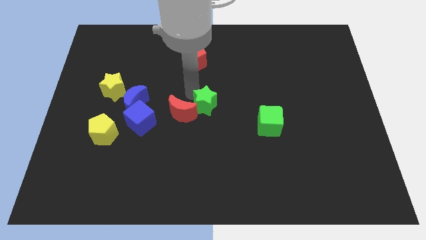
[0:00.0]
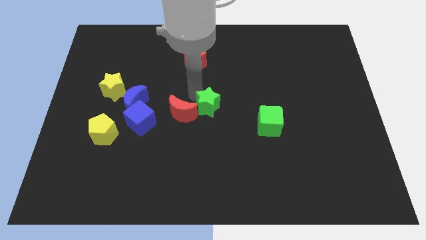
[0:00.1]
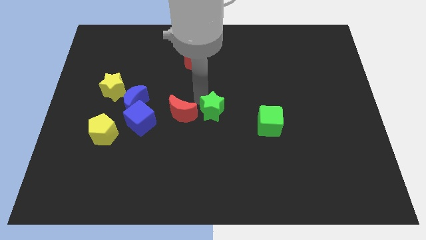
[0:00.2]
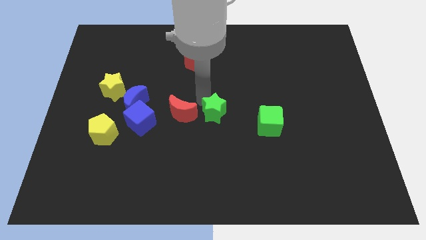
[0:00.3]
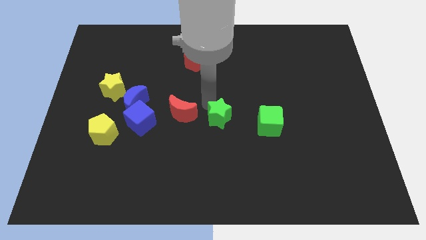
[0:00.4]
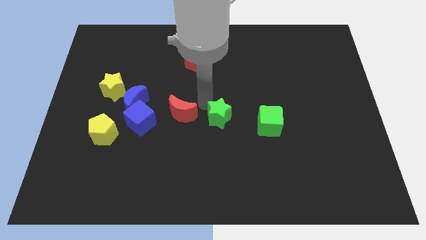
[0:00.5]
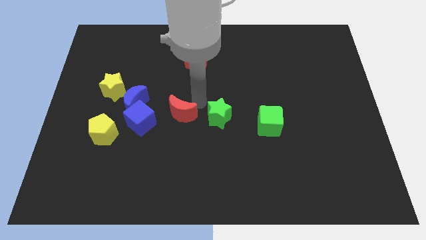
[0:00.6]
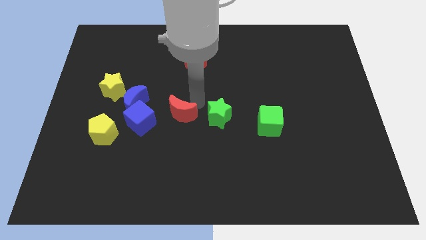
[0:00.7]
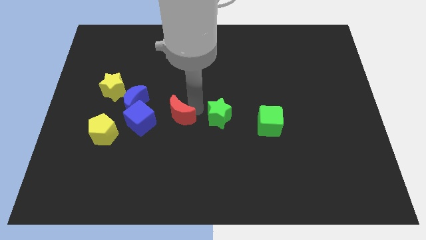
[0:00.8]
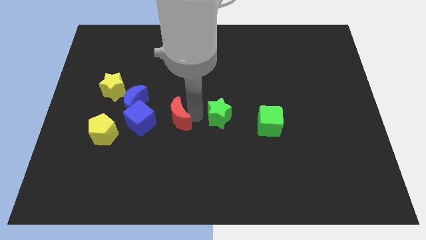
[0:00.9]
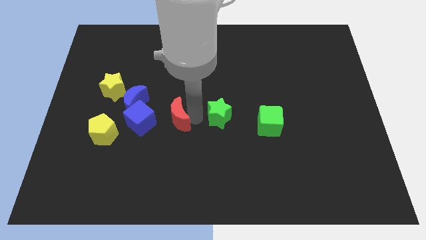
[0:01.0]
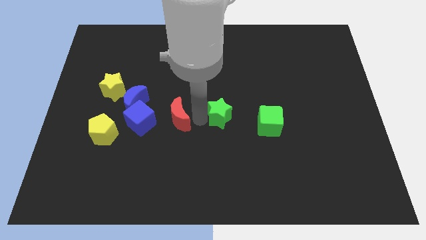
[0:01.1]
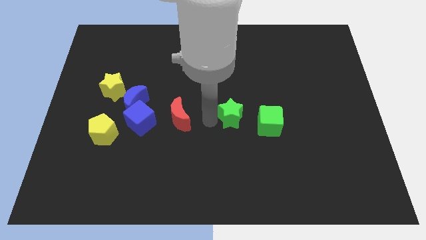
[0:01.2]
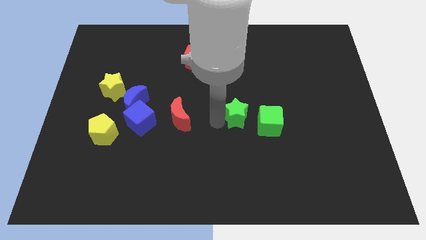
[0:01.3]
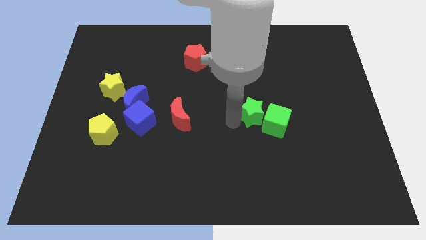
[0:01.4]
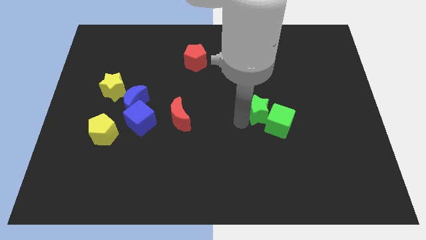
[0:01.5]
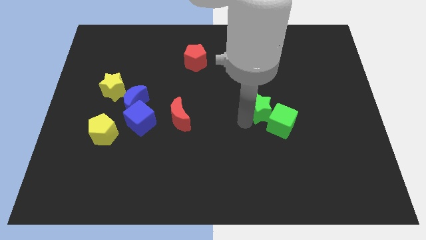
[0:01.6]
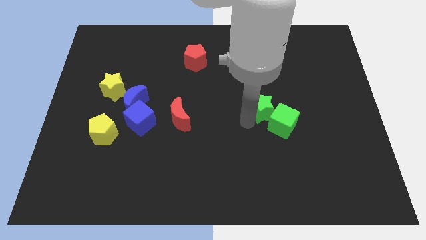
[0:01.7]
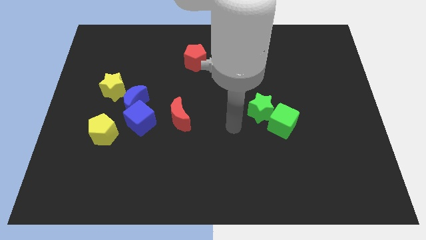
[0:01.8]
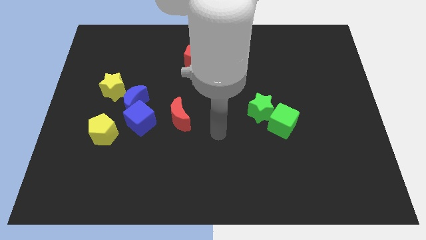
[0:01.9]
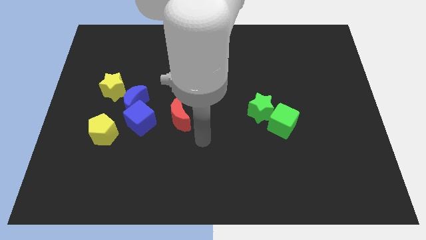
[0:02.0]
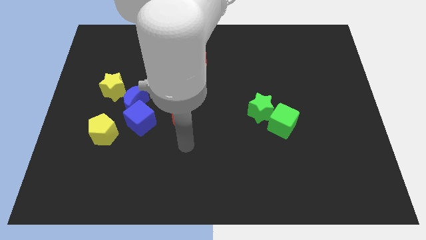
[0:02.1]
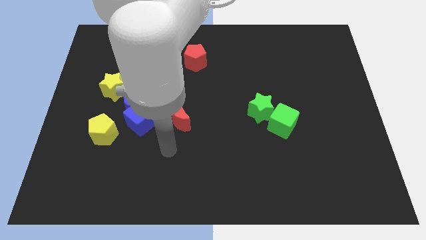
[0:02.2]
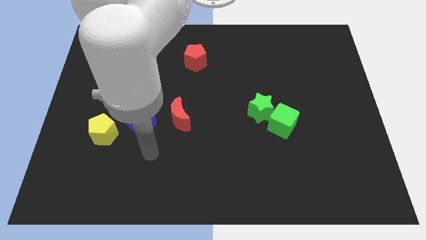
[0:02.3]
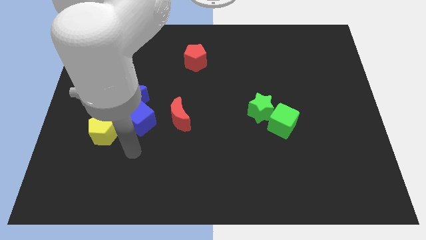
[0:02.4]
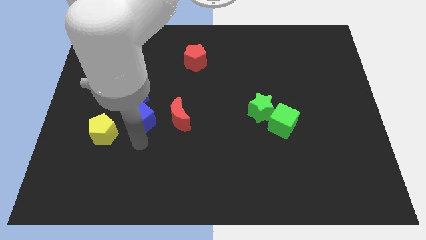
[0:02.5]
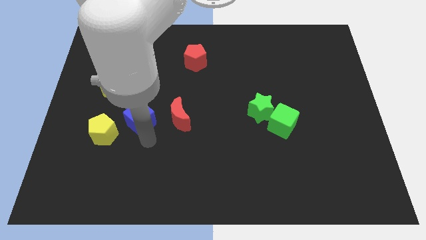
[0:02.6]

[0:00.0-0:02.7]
move the green star to the left of the green cube

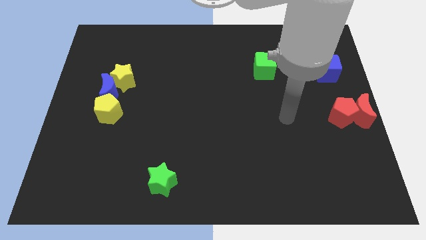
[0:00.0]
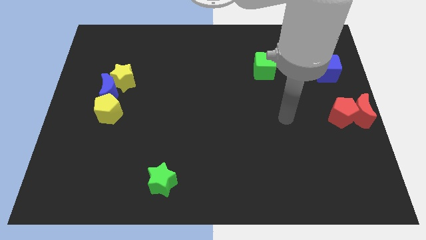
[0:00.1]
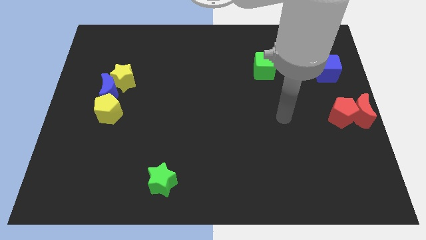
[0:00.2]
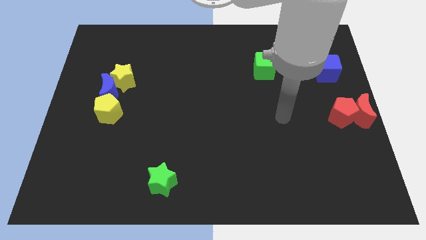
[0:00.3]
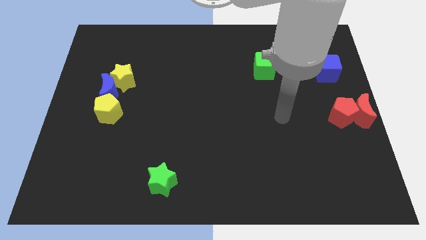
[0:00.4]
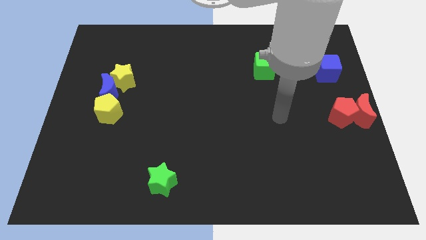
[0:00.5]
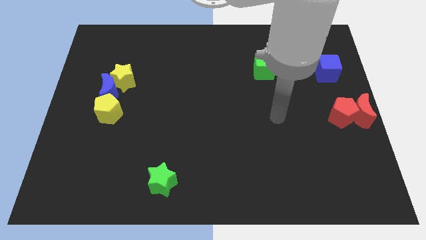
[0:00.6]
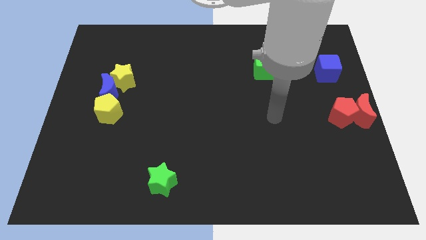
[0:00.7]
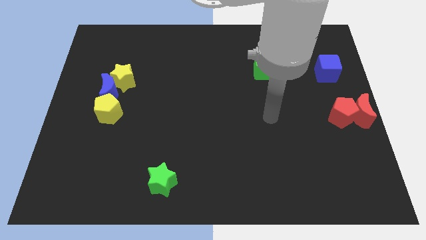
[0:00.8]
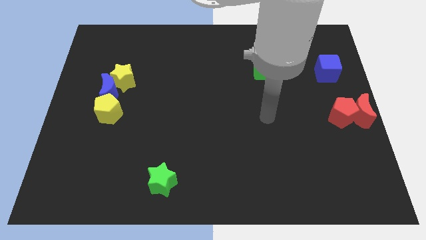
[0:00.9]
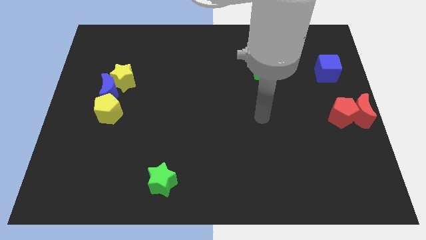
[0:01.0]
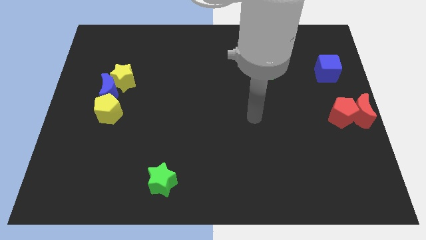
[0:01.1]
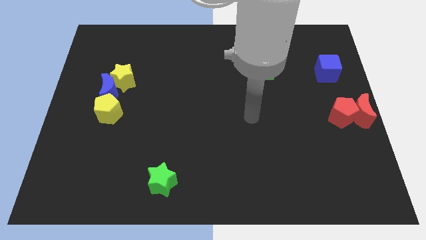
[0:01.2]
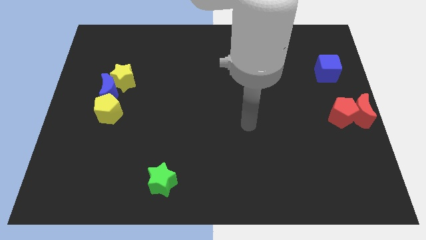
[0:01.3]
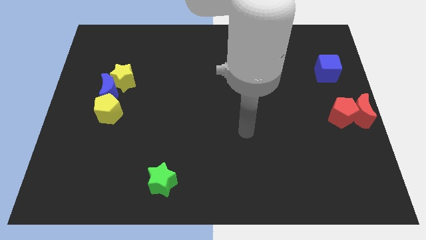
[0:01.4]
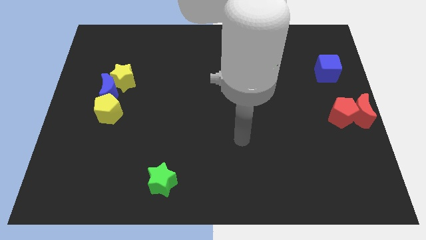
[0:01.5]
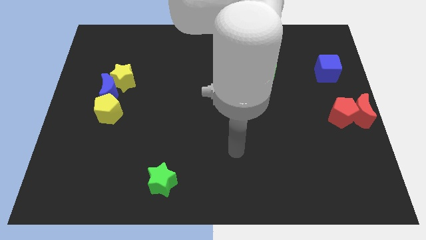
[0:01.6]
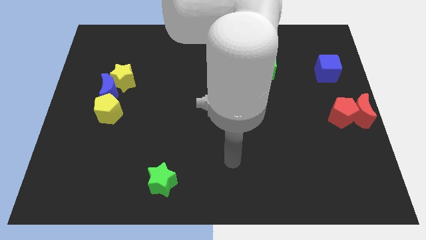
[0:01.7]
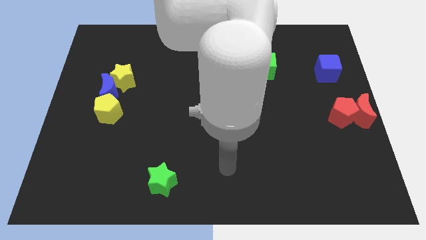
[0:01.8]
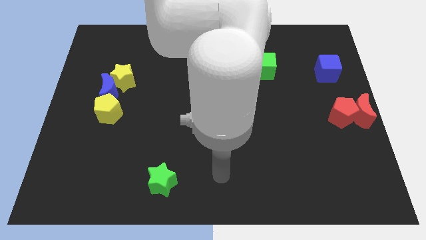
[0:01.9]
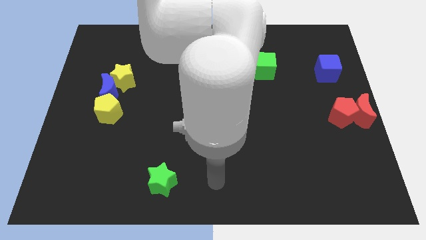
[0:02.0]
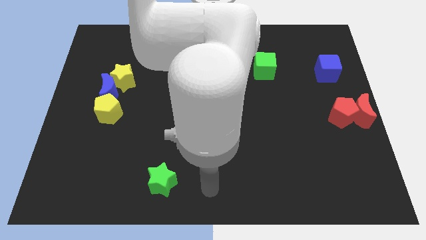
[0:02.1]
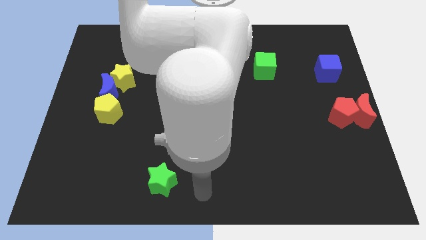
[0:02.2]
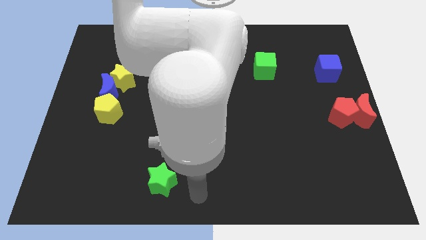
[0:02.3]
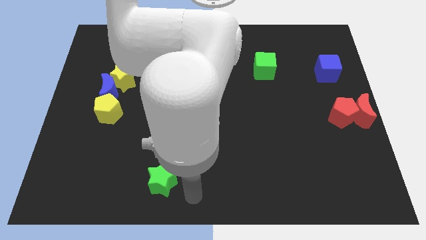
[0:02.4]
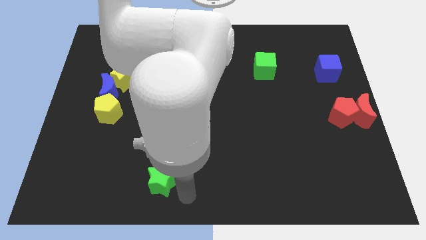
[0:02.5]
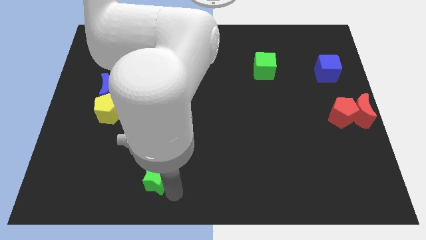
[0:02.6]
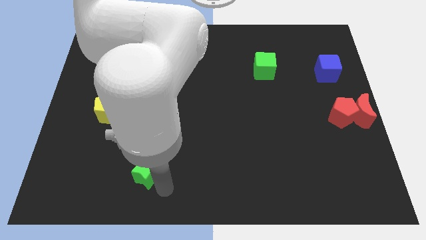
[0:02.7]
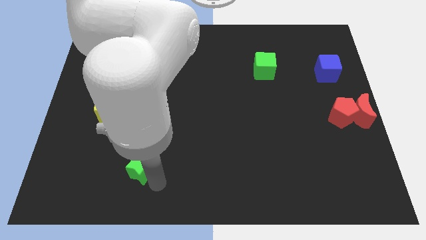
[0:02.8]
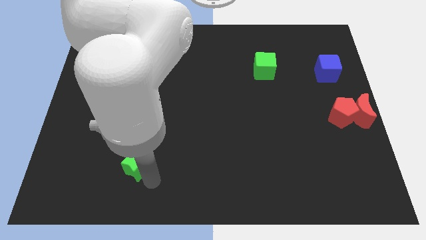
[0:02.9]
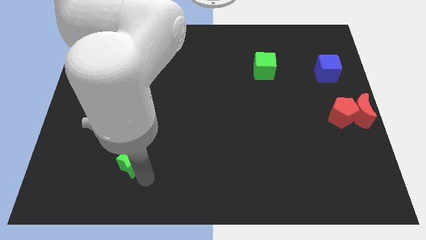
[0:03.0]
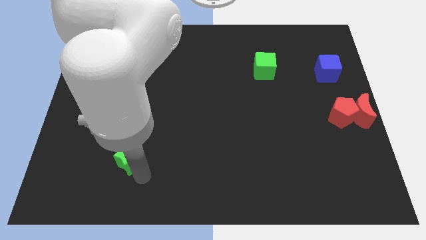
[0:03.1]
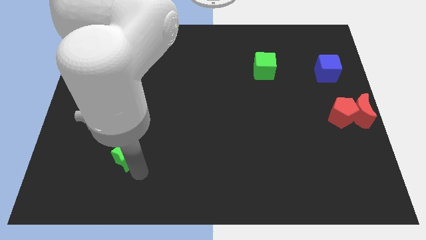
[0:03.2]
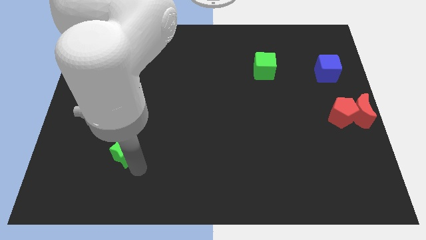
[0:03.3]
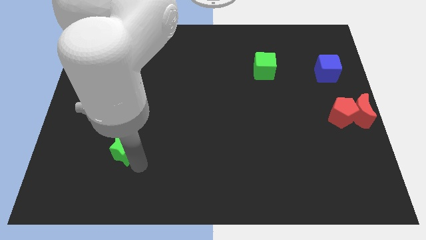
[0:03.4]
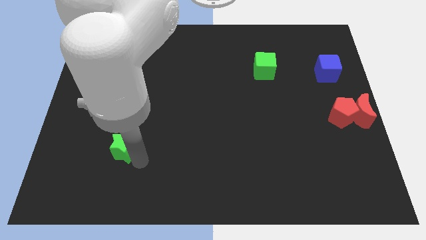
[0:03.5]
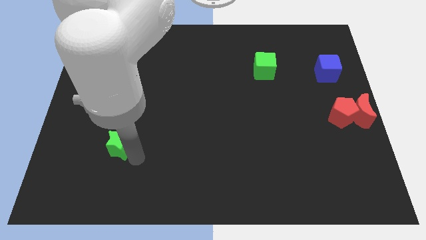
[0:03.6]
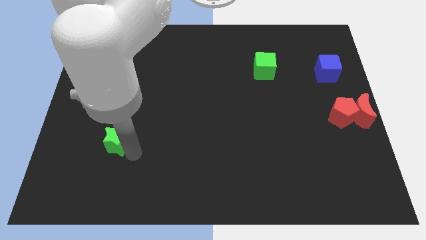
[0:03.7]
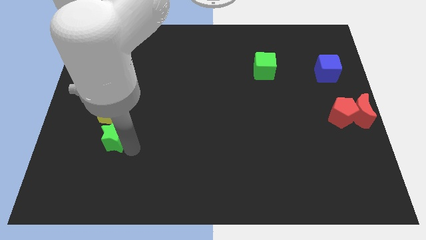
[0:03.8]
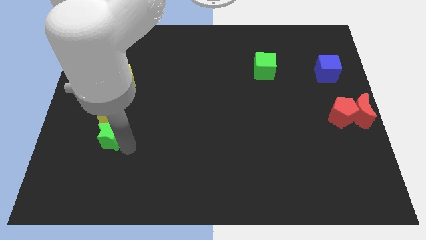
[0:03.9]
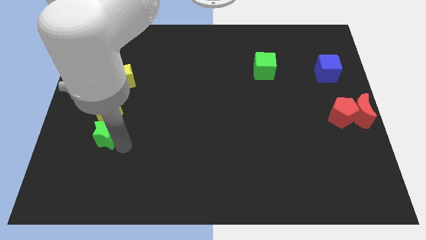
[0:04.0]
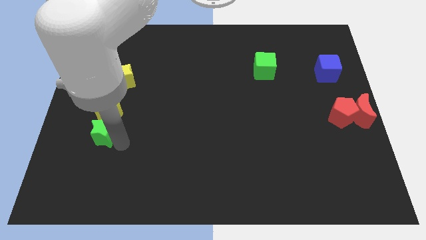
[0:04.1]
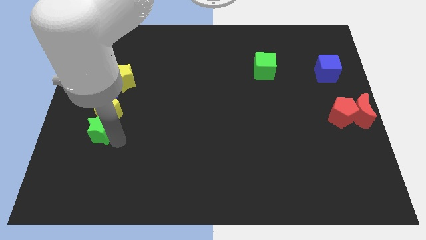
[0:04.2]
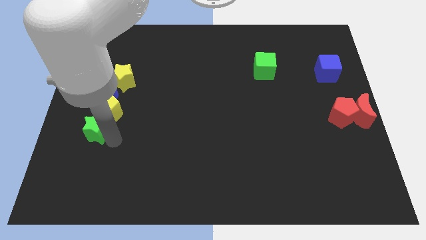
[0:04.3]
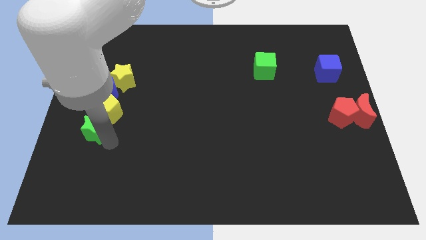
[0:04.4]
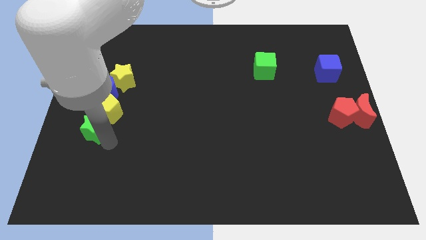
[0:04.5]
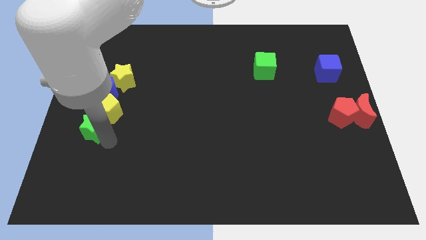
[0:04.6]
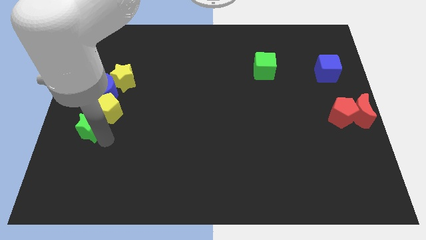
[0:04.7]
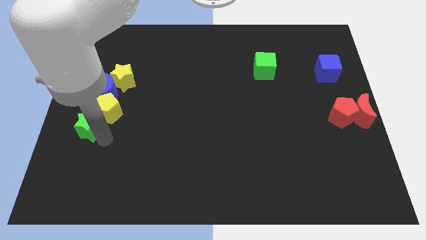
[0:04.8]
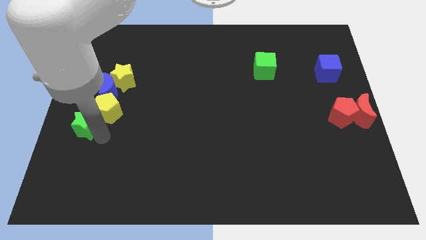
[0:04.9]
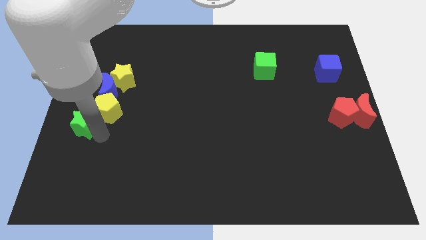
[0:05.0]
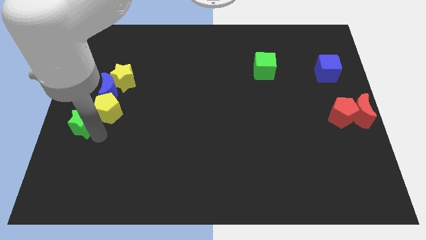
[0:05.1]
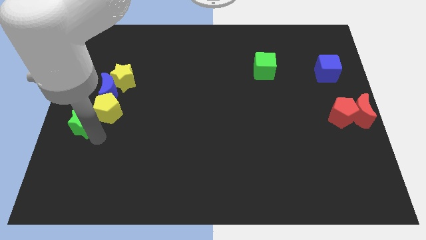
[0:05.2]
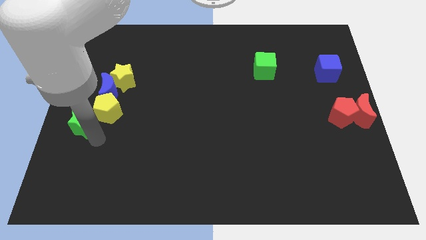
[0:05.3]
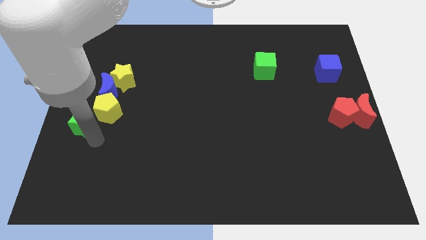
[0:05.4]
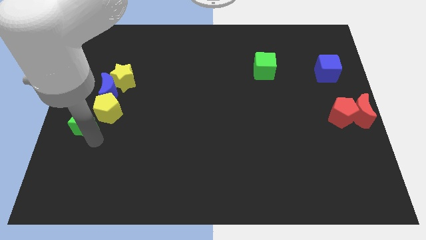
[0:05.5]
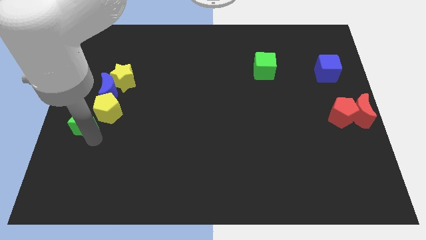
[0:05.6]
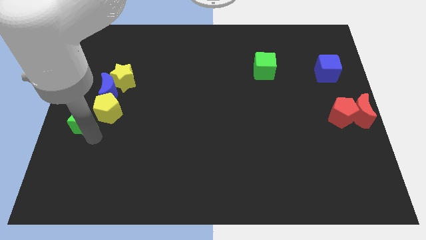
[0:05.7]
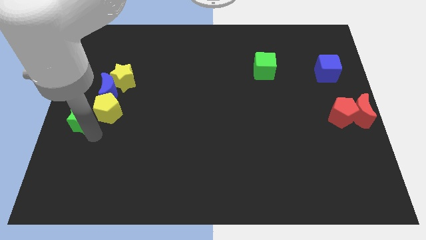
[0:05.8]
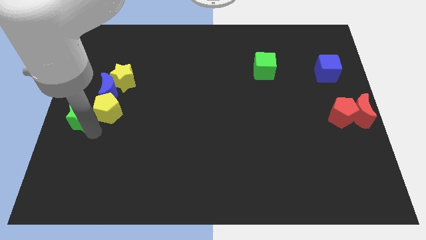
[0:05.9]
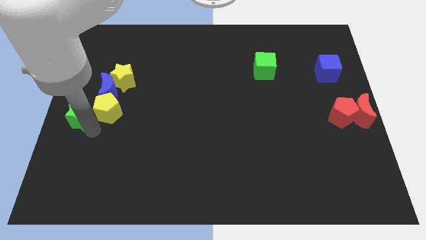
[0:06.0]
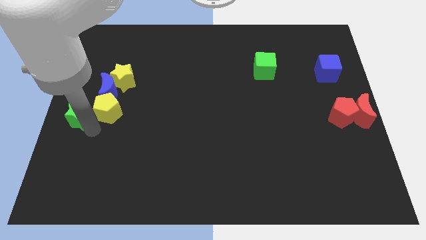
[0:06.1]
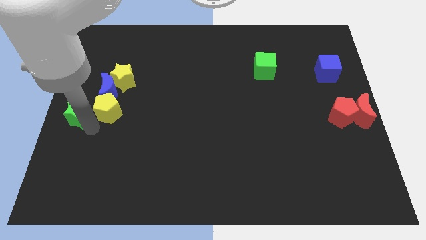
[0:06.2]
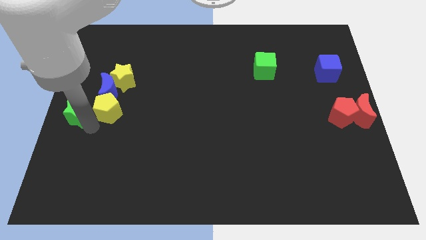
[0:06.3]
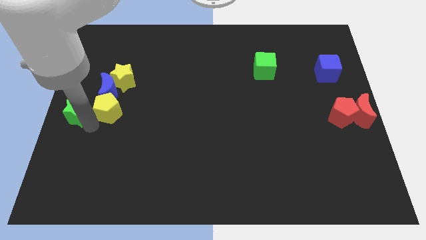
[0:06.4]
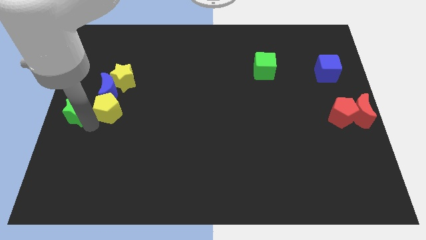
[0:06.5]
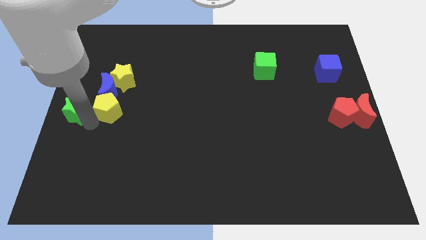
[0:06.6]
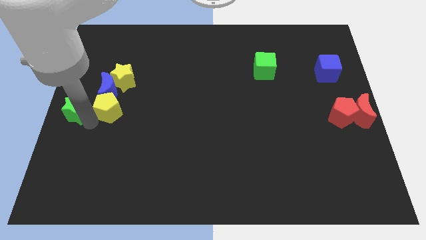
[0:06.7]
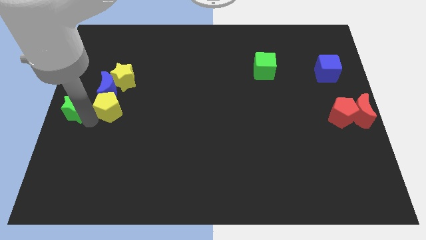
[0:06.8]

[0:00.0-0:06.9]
place green star to the left of the yellow pentagon
